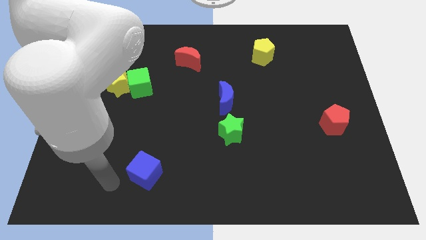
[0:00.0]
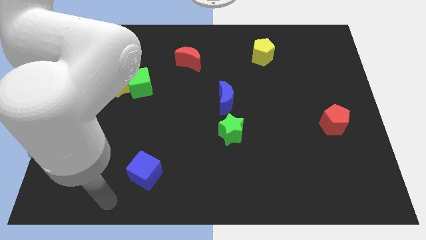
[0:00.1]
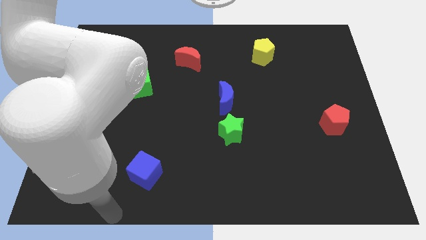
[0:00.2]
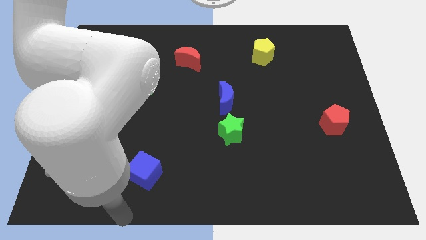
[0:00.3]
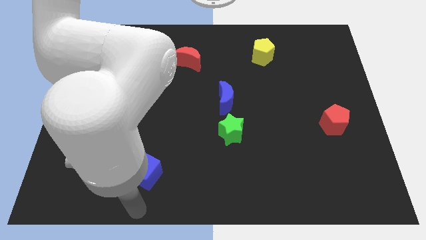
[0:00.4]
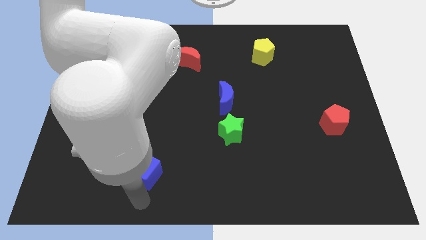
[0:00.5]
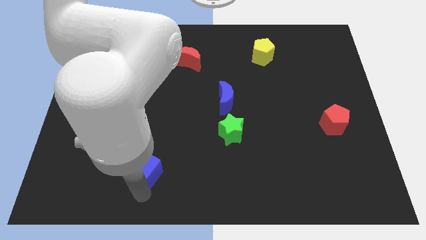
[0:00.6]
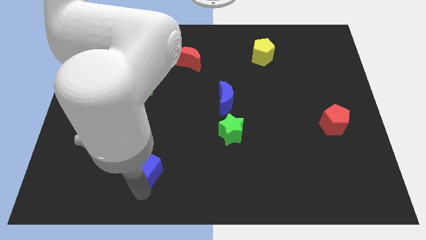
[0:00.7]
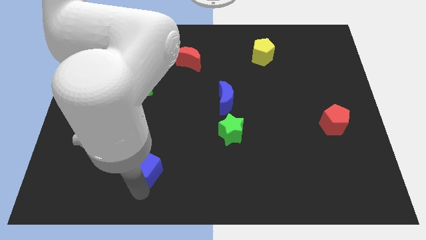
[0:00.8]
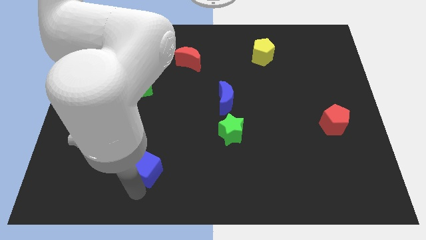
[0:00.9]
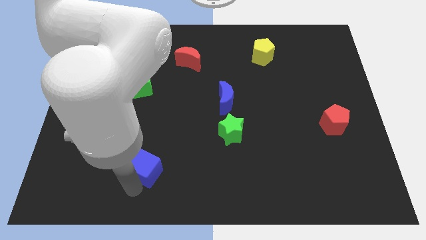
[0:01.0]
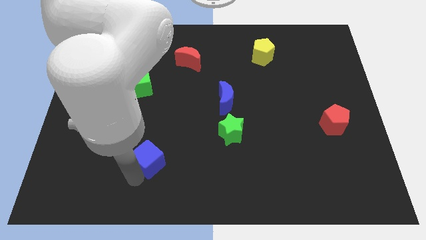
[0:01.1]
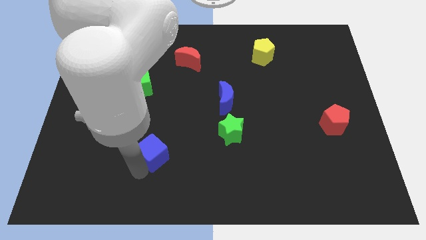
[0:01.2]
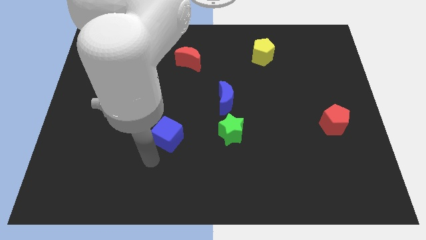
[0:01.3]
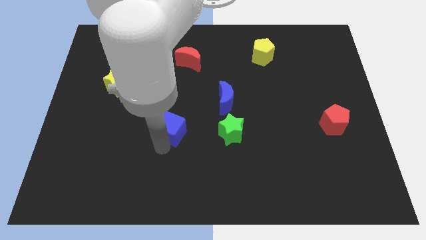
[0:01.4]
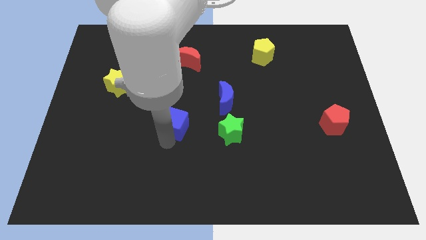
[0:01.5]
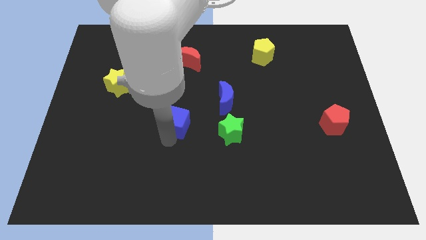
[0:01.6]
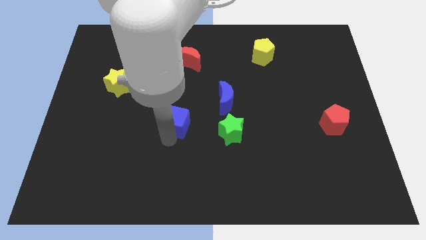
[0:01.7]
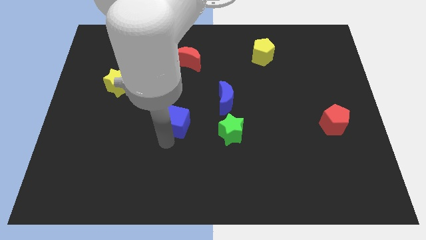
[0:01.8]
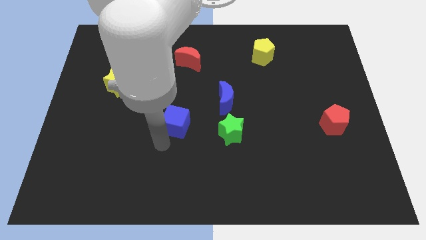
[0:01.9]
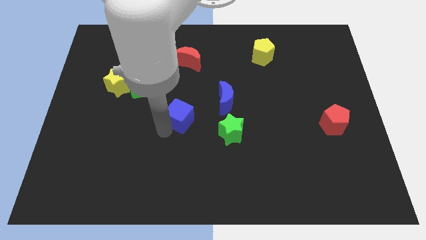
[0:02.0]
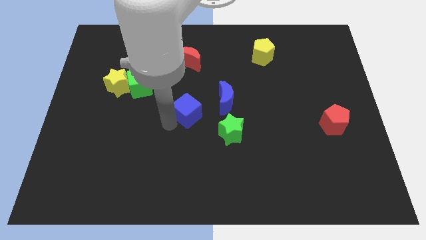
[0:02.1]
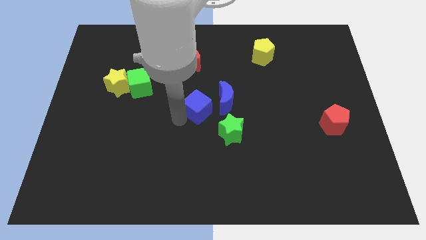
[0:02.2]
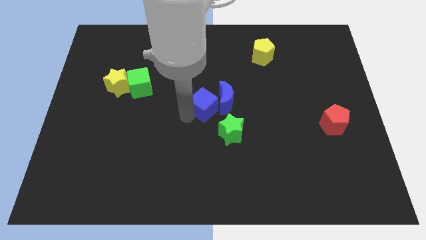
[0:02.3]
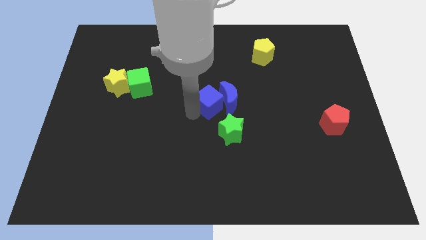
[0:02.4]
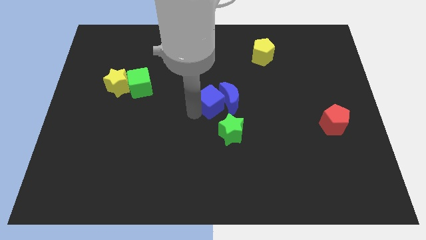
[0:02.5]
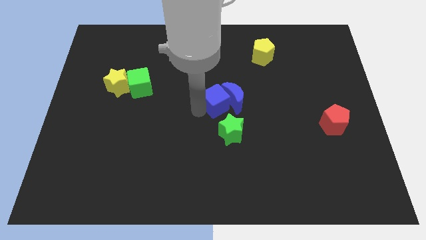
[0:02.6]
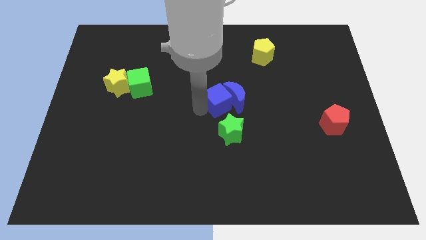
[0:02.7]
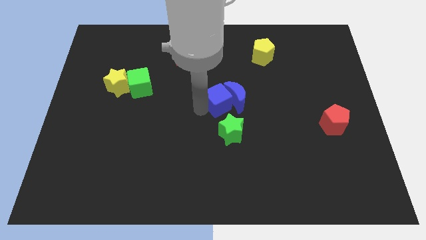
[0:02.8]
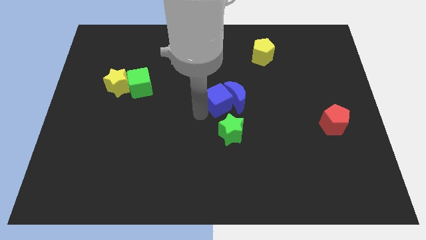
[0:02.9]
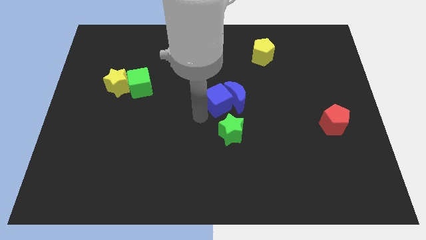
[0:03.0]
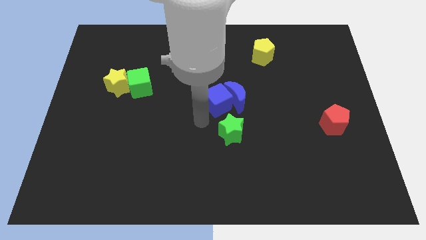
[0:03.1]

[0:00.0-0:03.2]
move blue cube into the blue moon

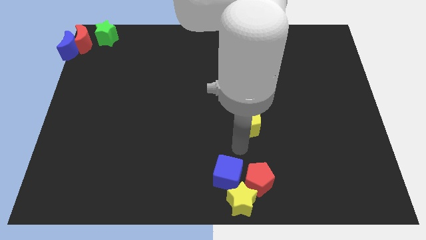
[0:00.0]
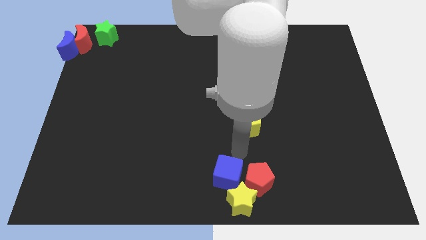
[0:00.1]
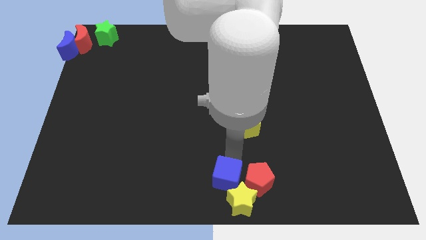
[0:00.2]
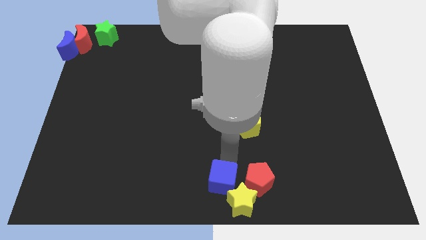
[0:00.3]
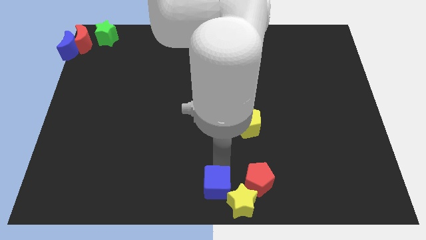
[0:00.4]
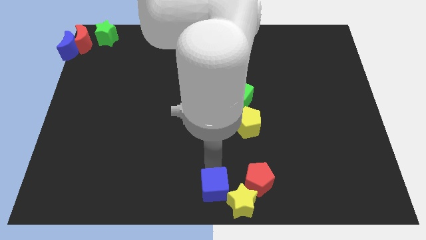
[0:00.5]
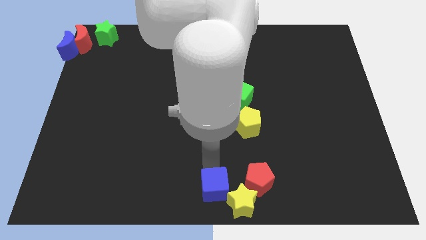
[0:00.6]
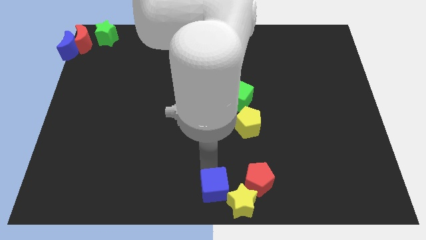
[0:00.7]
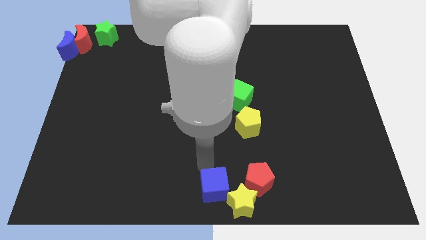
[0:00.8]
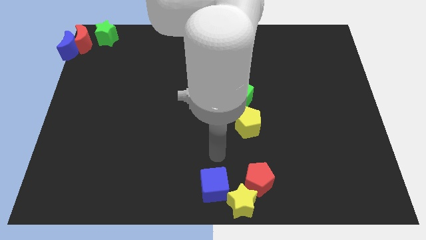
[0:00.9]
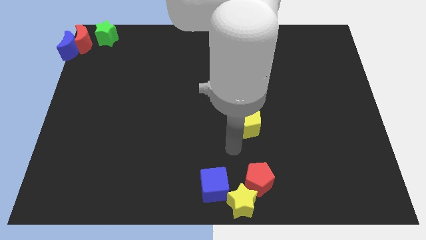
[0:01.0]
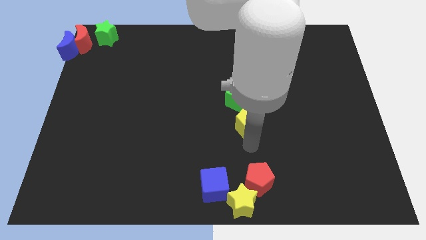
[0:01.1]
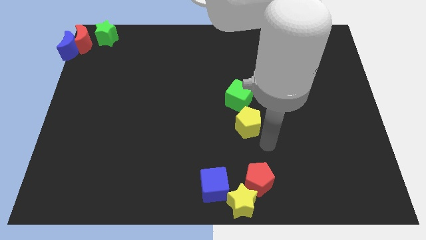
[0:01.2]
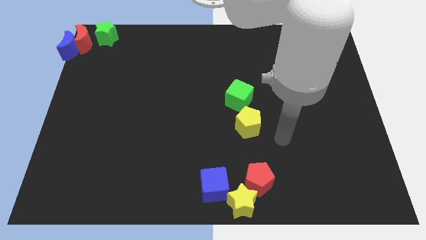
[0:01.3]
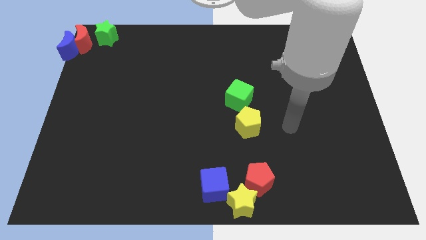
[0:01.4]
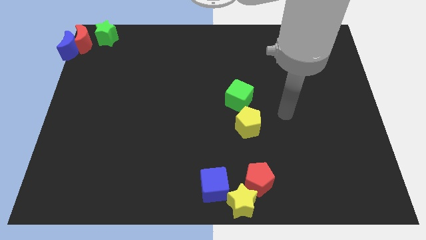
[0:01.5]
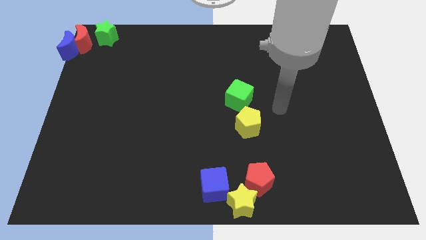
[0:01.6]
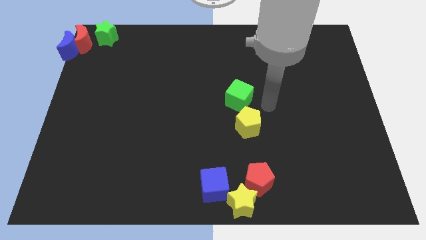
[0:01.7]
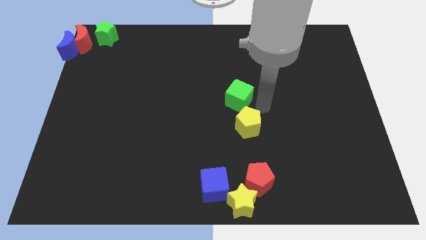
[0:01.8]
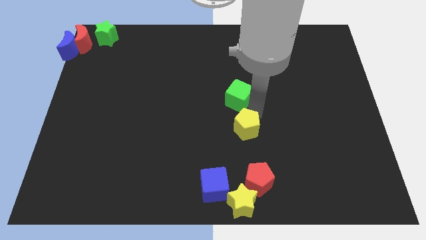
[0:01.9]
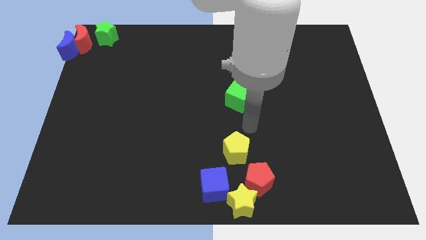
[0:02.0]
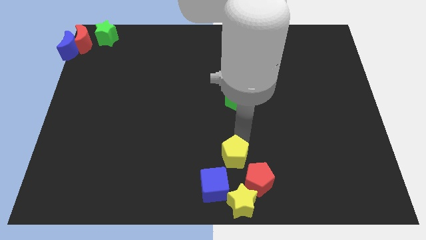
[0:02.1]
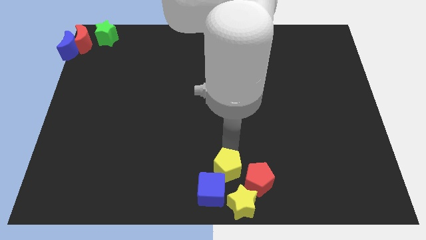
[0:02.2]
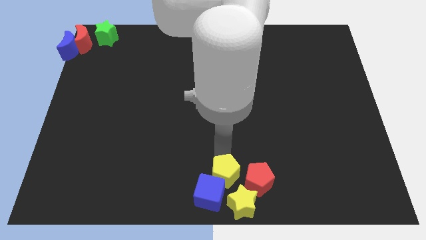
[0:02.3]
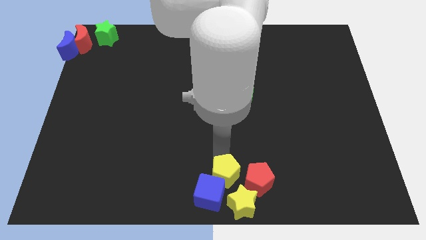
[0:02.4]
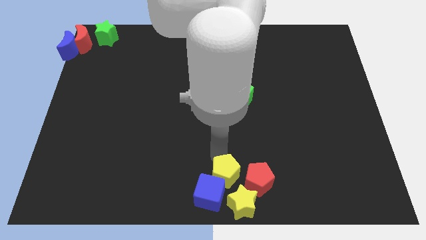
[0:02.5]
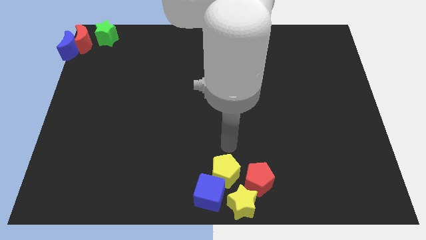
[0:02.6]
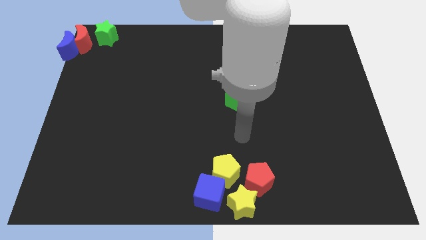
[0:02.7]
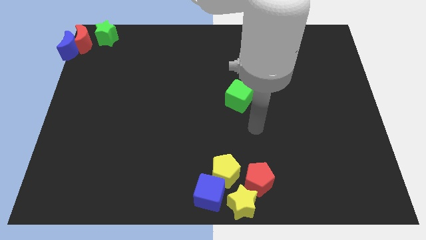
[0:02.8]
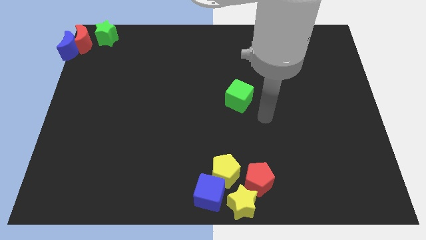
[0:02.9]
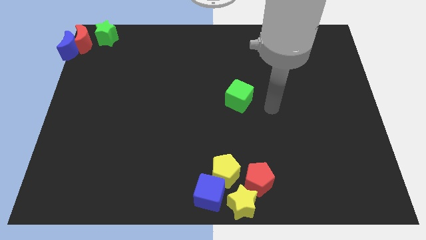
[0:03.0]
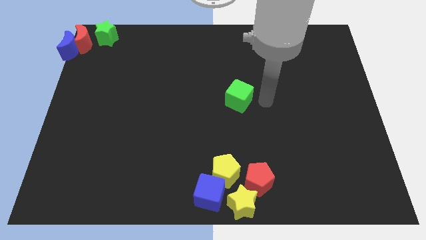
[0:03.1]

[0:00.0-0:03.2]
move the yellow pentagon to the bottom center

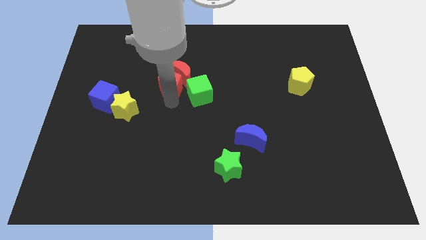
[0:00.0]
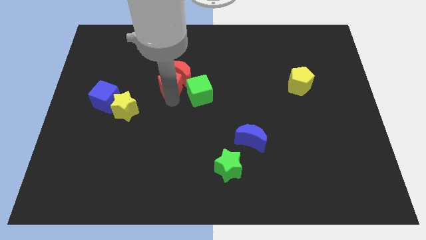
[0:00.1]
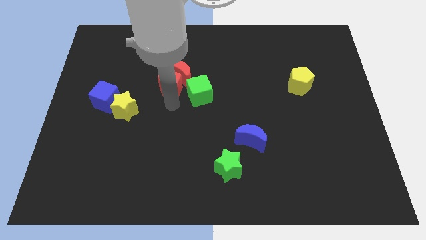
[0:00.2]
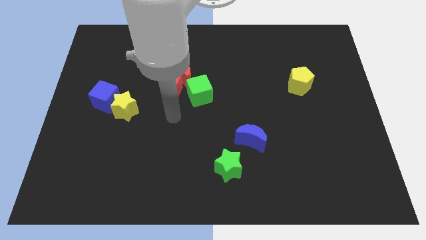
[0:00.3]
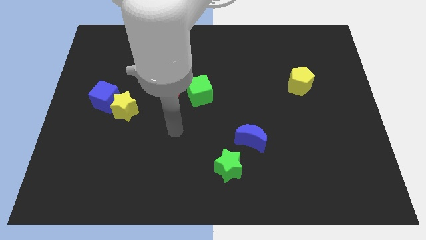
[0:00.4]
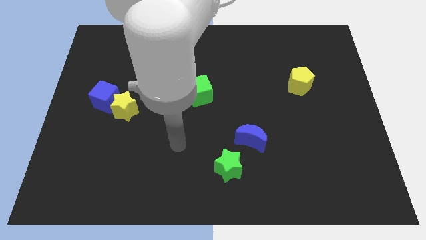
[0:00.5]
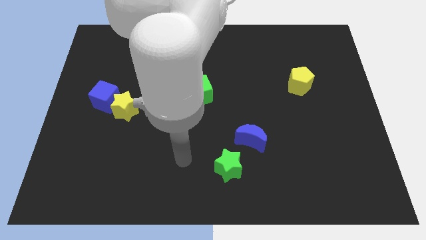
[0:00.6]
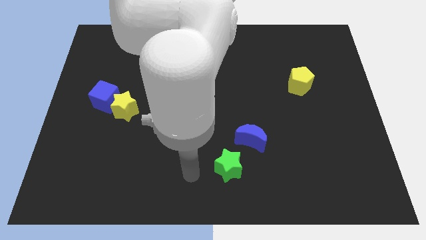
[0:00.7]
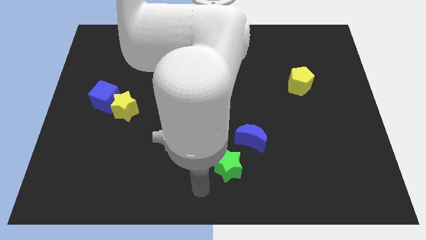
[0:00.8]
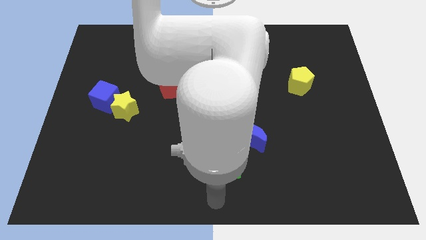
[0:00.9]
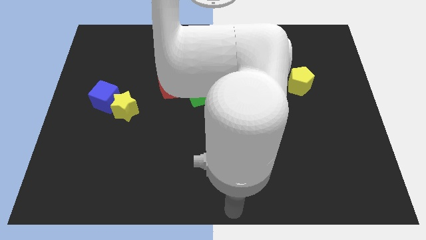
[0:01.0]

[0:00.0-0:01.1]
move your arm at the bottom center of the board

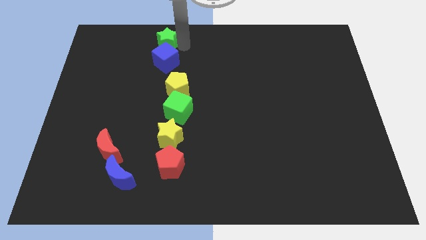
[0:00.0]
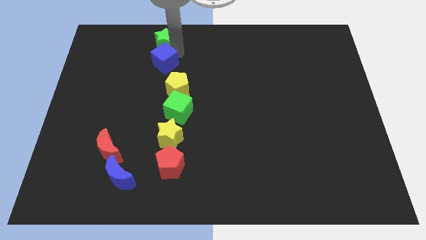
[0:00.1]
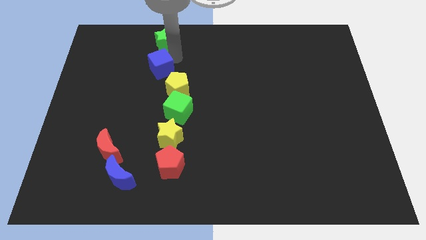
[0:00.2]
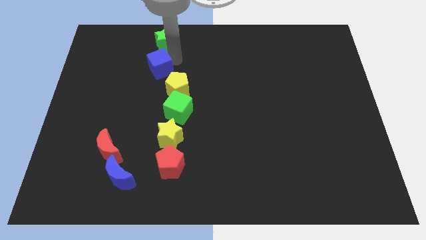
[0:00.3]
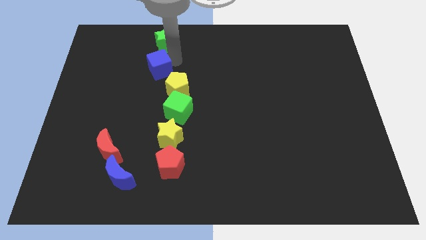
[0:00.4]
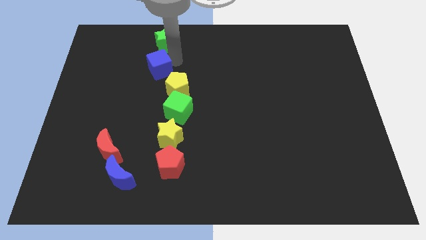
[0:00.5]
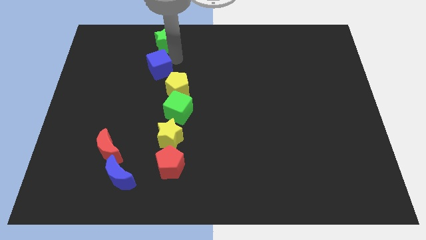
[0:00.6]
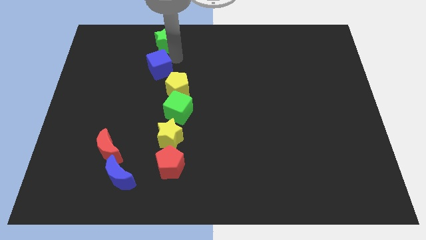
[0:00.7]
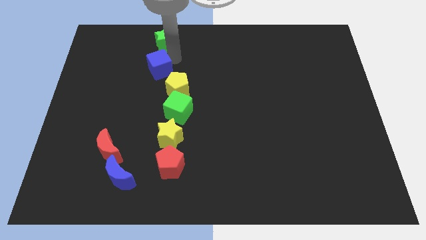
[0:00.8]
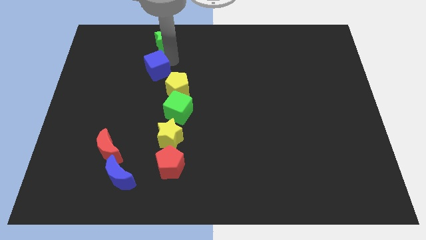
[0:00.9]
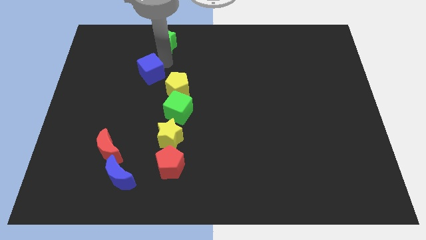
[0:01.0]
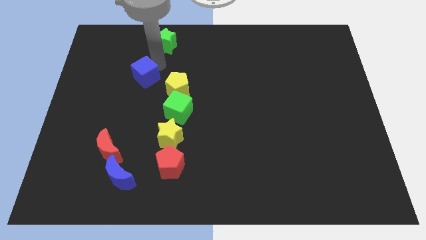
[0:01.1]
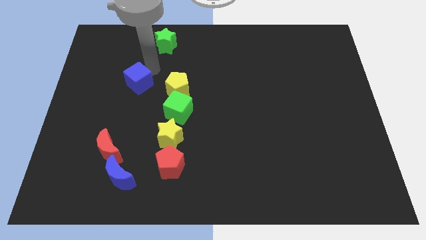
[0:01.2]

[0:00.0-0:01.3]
separate the blue cube from the green star
